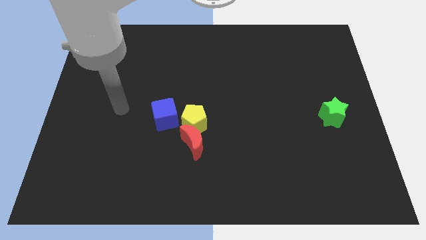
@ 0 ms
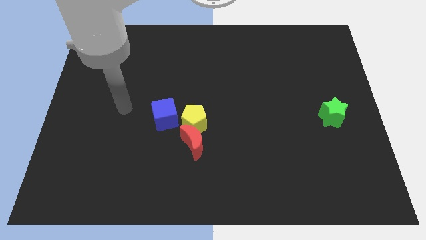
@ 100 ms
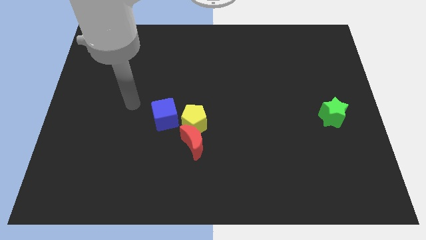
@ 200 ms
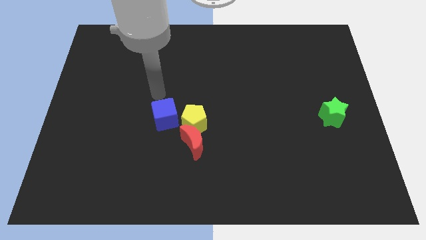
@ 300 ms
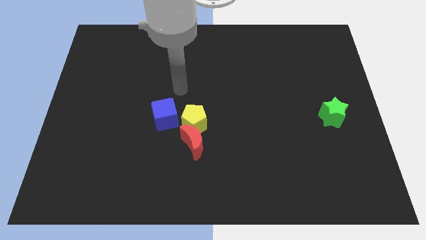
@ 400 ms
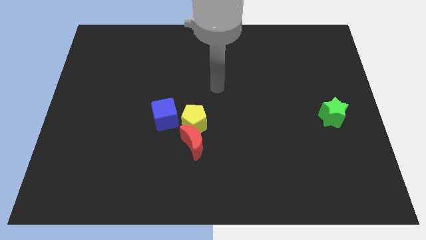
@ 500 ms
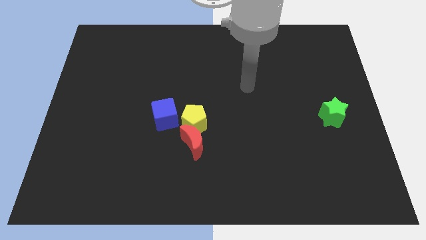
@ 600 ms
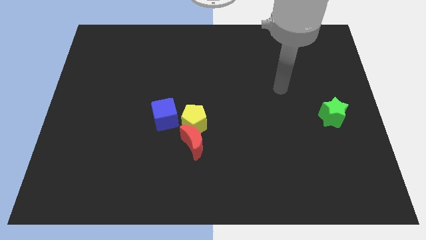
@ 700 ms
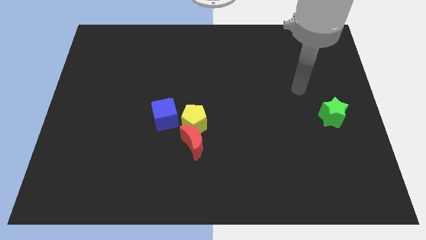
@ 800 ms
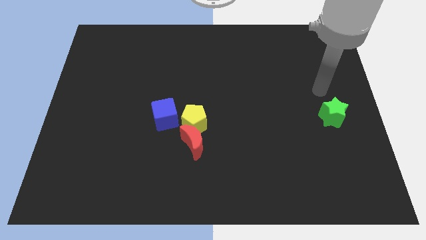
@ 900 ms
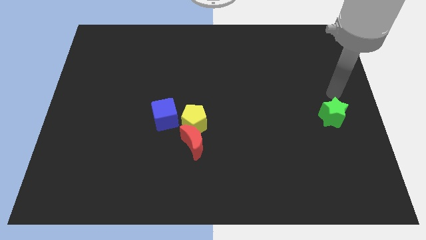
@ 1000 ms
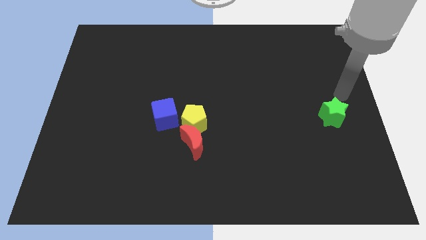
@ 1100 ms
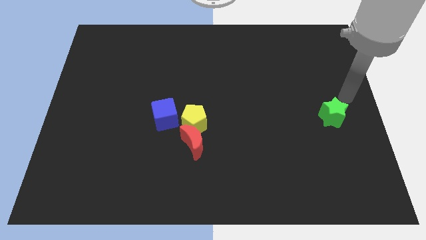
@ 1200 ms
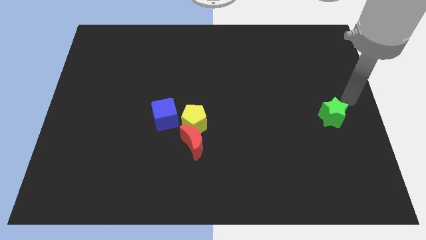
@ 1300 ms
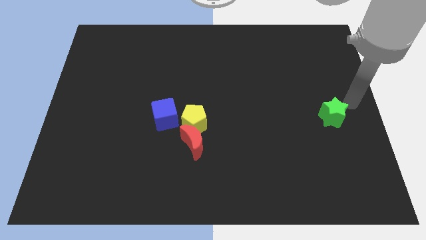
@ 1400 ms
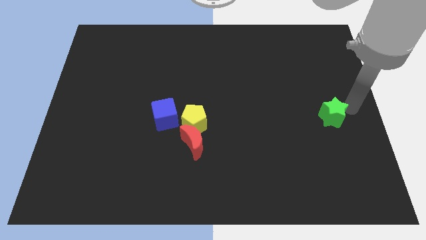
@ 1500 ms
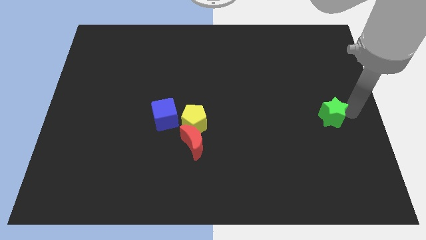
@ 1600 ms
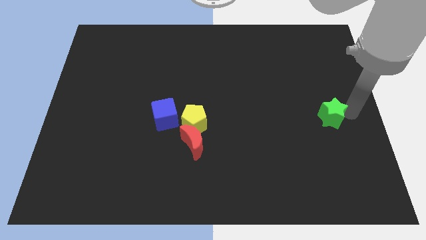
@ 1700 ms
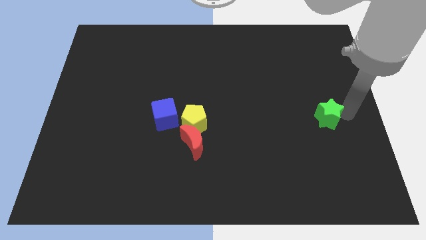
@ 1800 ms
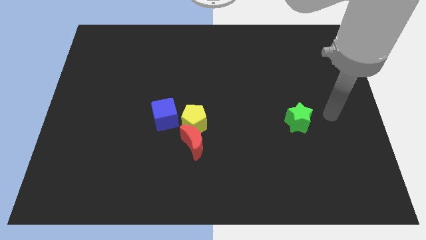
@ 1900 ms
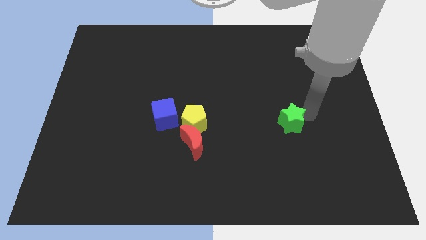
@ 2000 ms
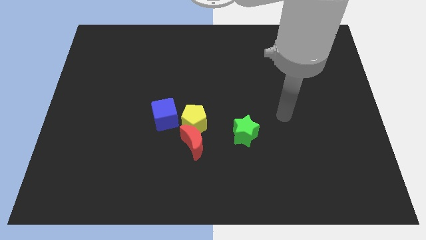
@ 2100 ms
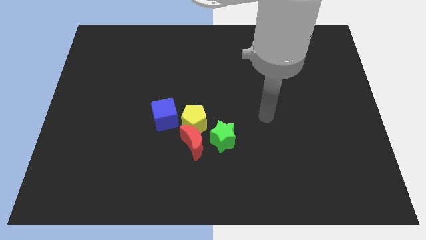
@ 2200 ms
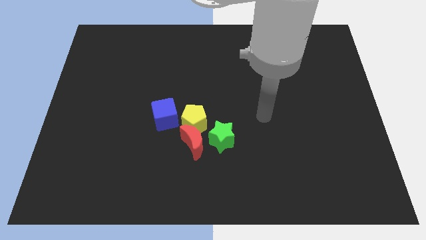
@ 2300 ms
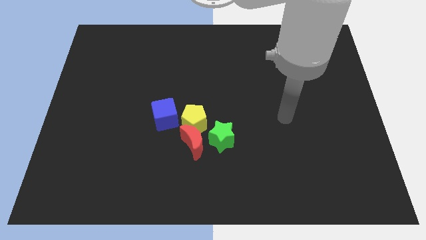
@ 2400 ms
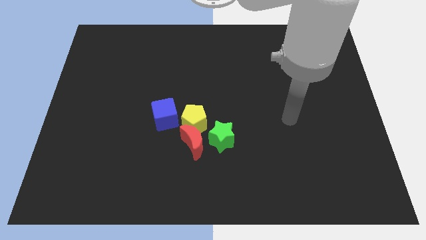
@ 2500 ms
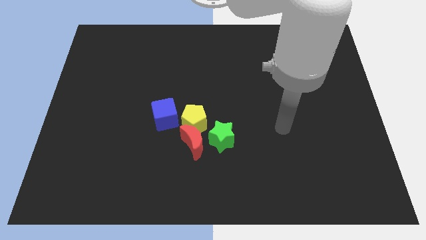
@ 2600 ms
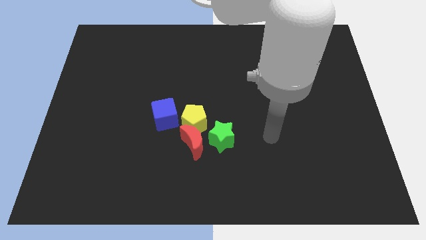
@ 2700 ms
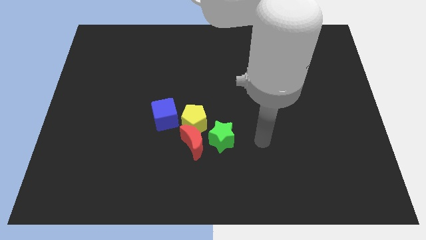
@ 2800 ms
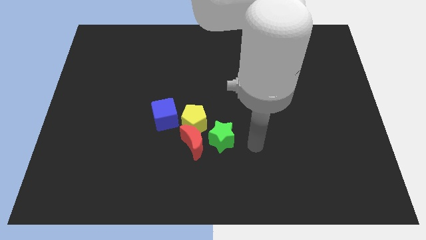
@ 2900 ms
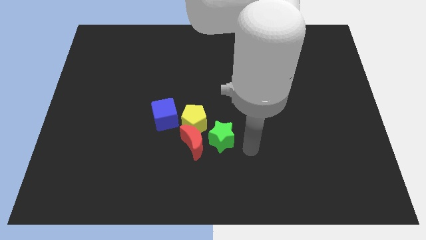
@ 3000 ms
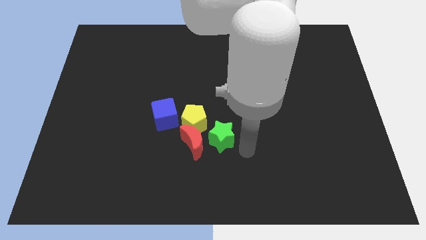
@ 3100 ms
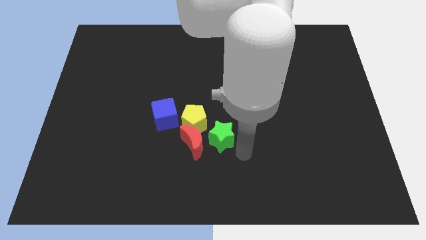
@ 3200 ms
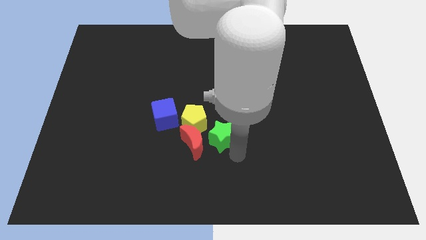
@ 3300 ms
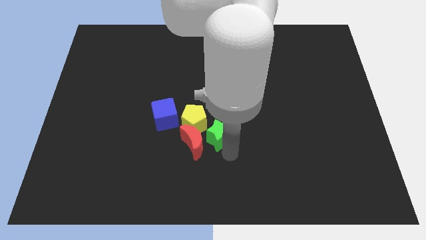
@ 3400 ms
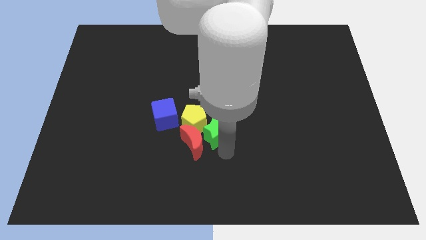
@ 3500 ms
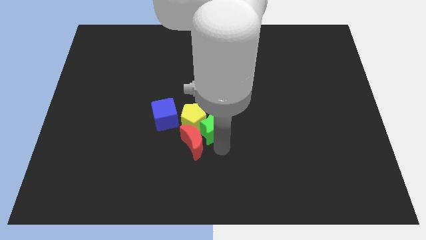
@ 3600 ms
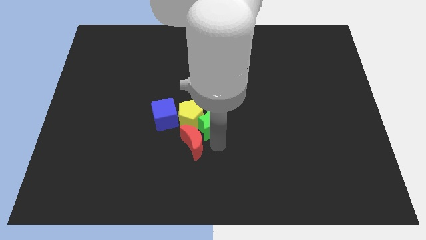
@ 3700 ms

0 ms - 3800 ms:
move the green star close to the yellow block

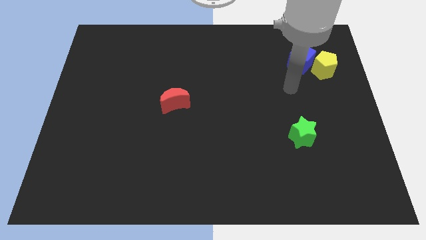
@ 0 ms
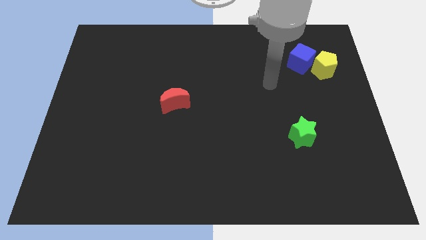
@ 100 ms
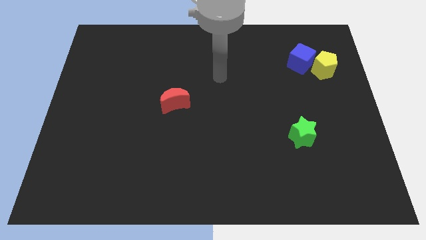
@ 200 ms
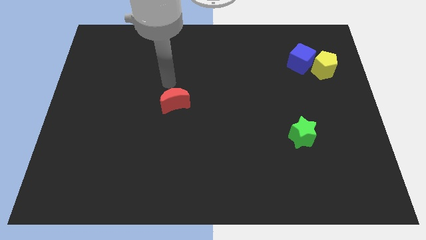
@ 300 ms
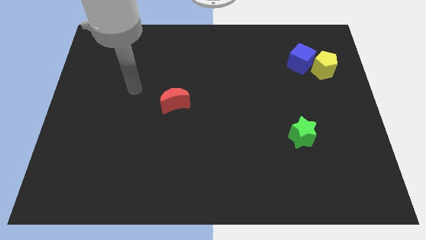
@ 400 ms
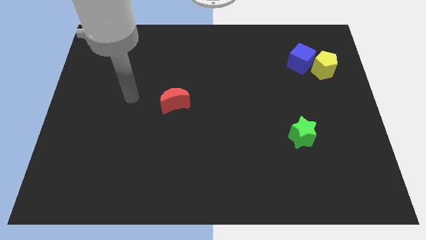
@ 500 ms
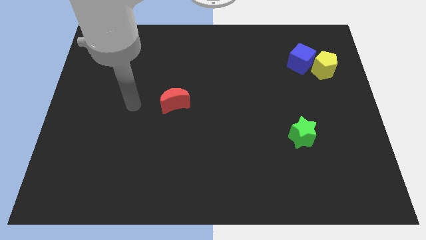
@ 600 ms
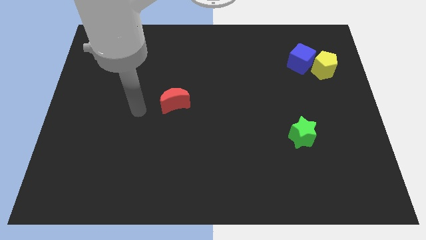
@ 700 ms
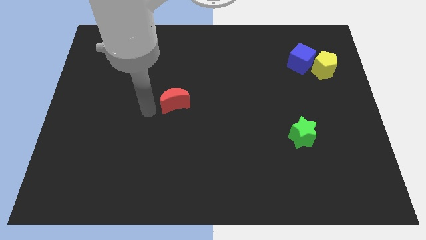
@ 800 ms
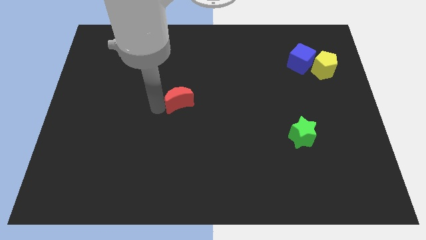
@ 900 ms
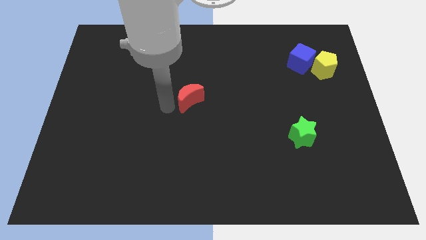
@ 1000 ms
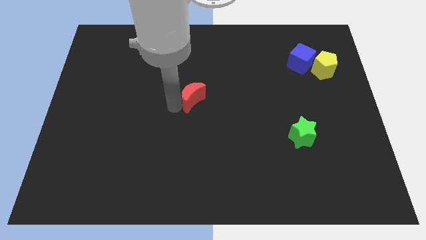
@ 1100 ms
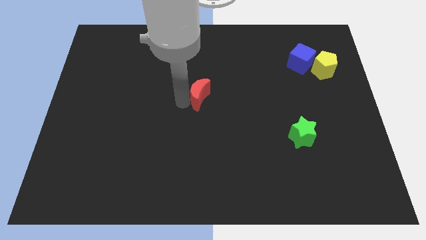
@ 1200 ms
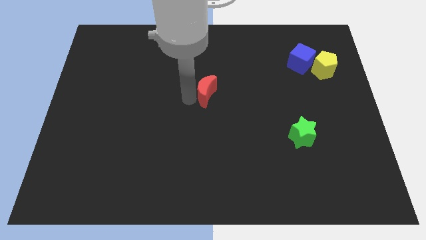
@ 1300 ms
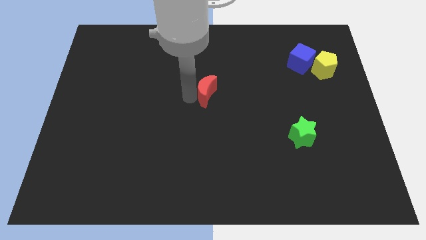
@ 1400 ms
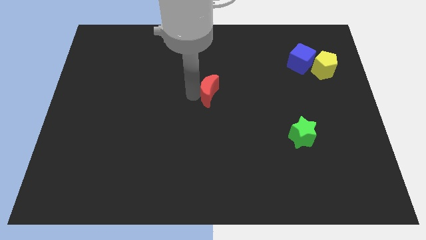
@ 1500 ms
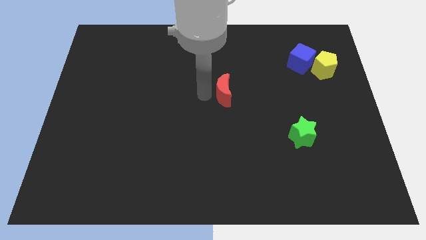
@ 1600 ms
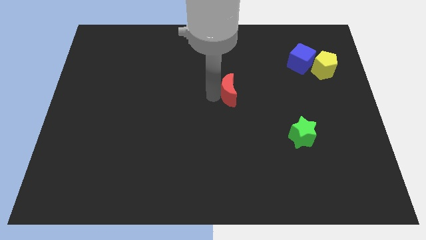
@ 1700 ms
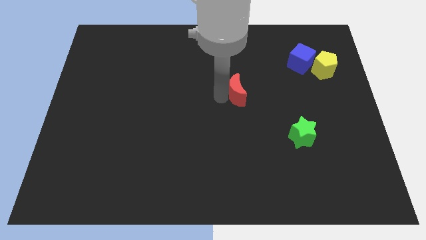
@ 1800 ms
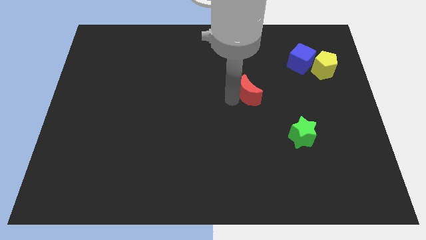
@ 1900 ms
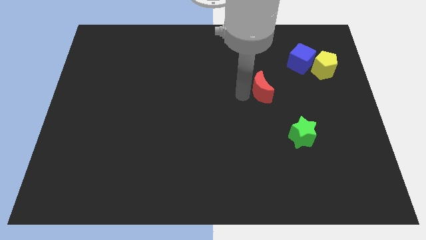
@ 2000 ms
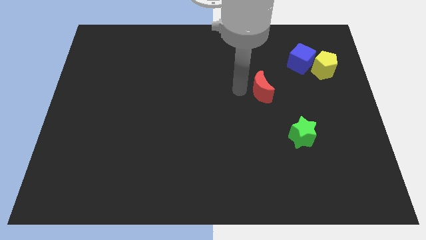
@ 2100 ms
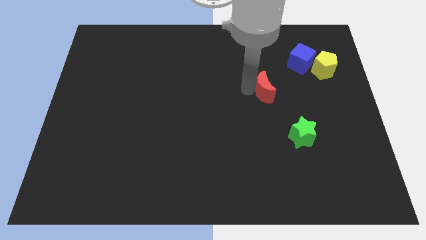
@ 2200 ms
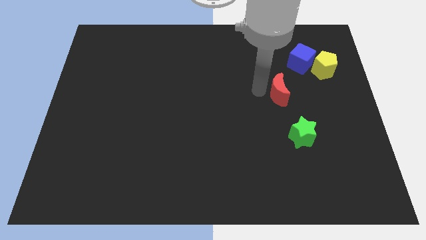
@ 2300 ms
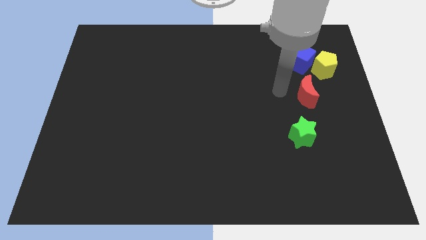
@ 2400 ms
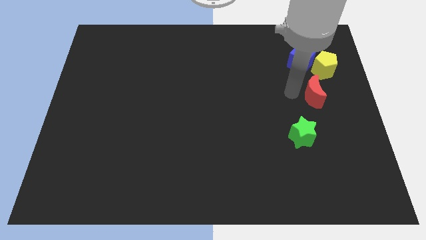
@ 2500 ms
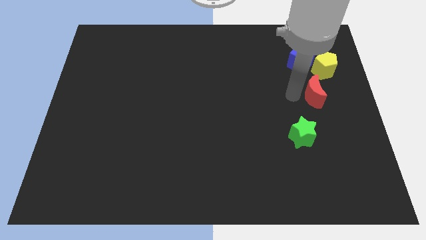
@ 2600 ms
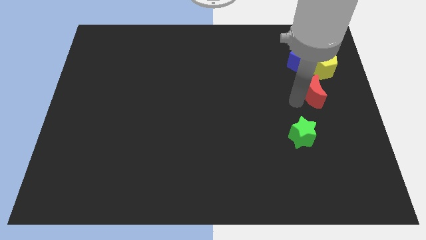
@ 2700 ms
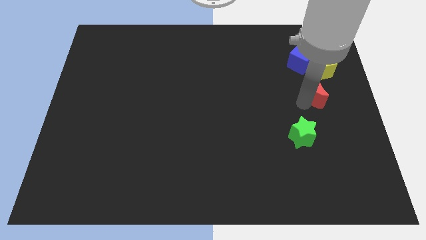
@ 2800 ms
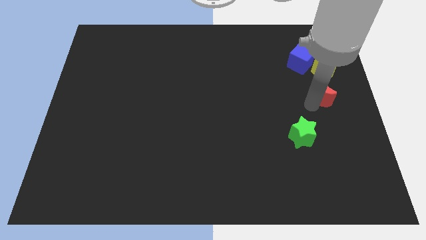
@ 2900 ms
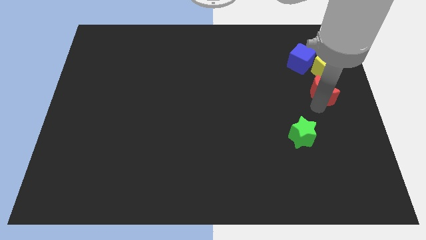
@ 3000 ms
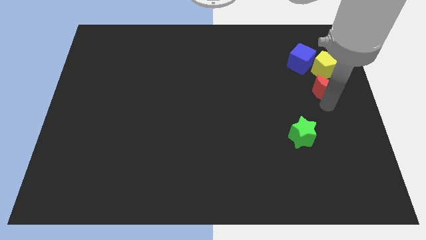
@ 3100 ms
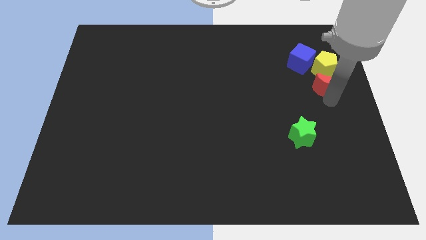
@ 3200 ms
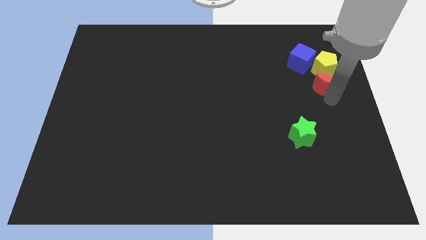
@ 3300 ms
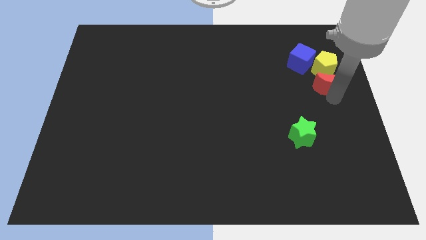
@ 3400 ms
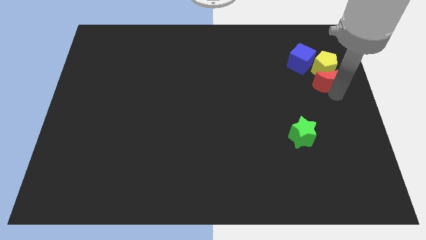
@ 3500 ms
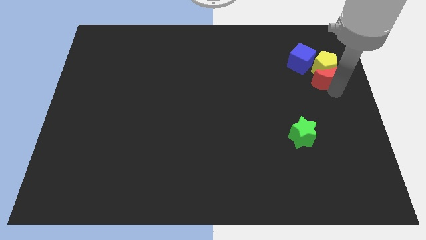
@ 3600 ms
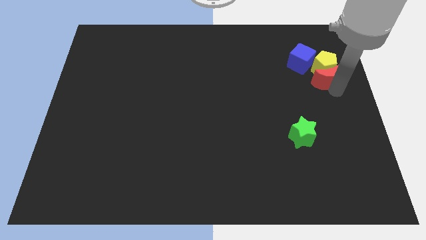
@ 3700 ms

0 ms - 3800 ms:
put the moon towards the yellow block

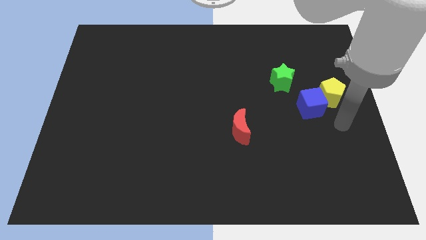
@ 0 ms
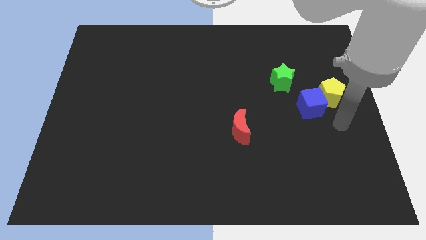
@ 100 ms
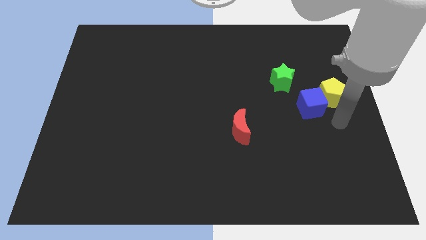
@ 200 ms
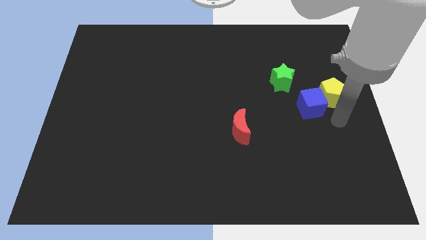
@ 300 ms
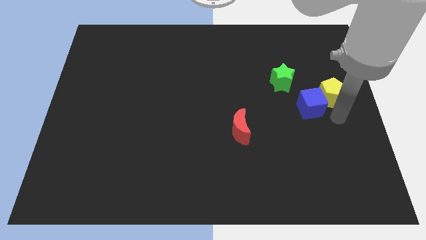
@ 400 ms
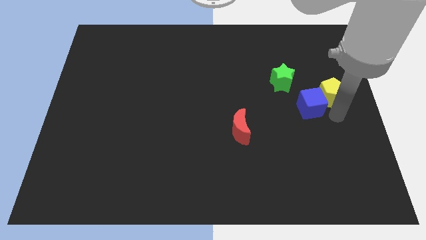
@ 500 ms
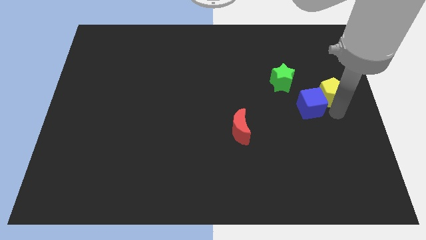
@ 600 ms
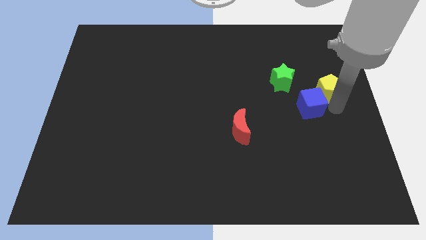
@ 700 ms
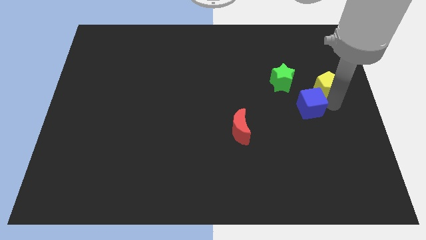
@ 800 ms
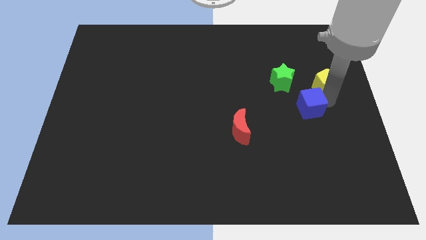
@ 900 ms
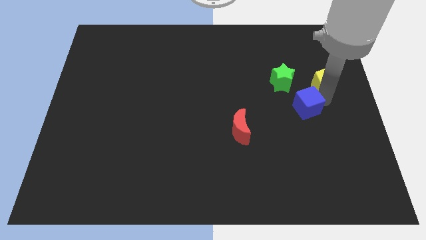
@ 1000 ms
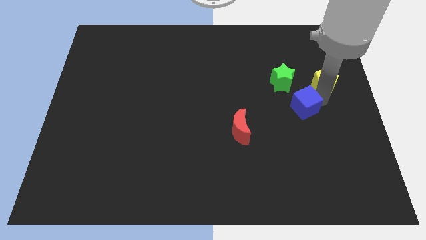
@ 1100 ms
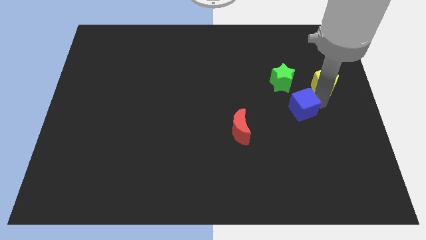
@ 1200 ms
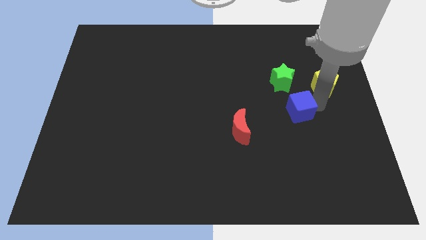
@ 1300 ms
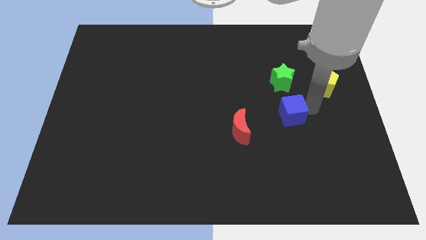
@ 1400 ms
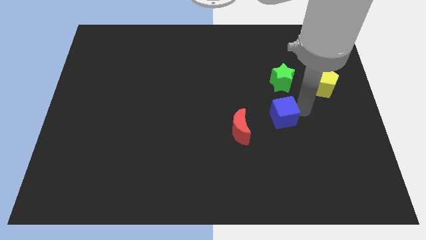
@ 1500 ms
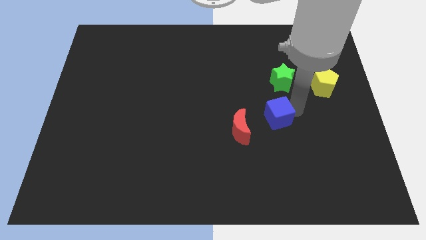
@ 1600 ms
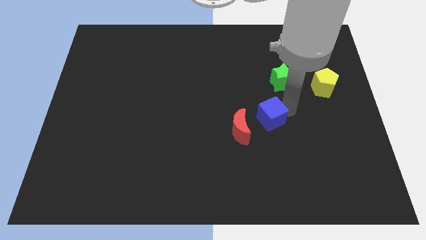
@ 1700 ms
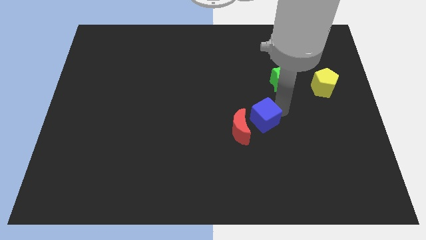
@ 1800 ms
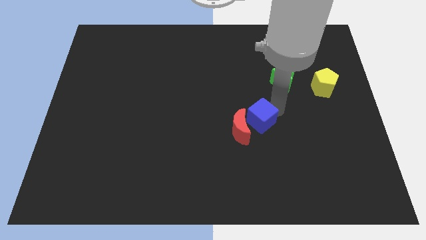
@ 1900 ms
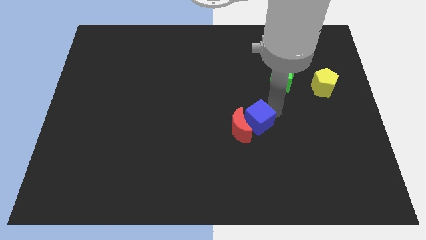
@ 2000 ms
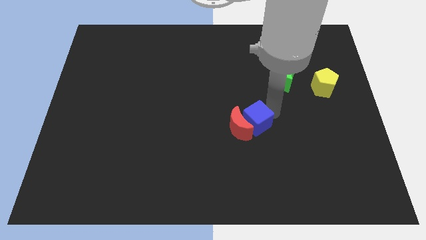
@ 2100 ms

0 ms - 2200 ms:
move the cube close to the moon
